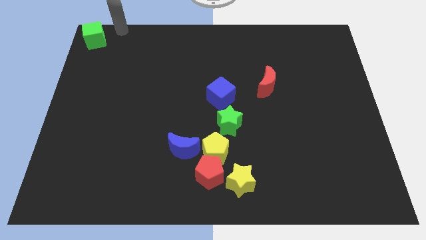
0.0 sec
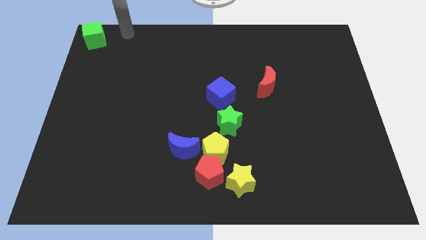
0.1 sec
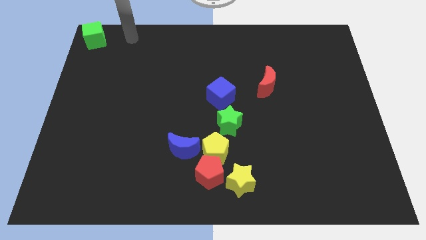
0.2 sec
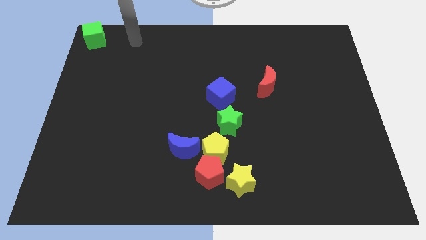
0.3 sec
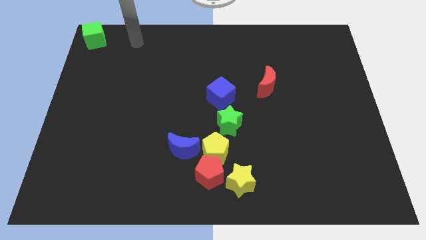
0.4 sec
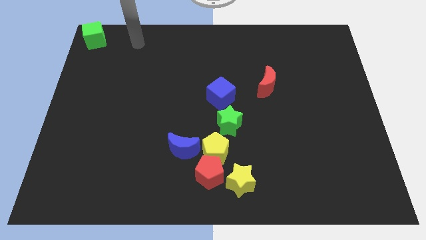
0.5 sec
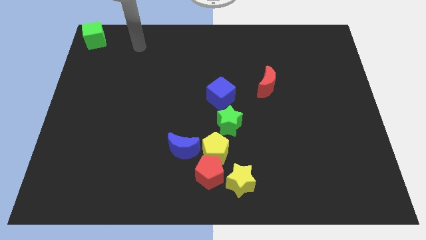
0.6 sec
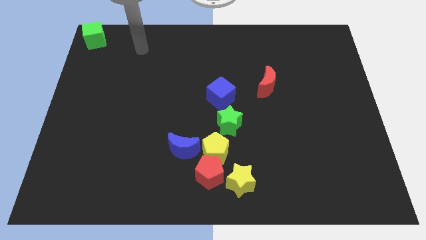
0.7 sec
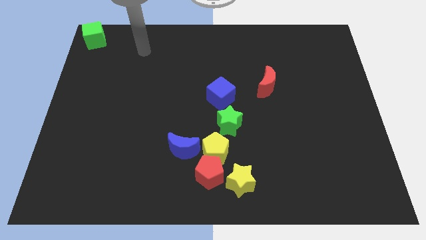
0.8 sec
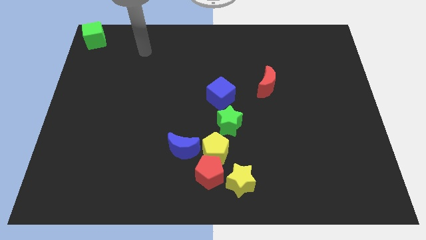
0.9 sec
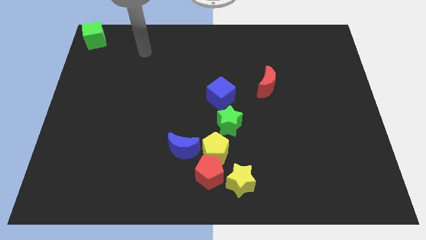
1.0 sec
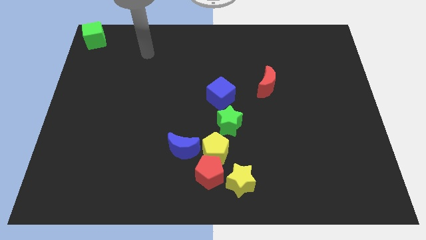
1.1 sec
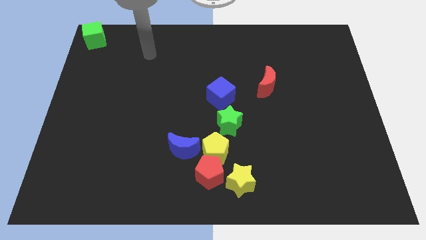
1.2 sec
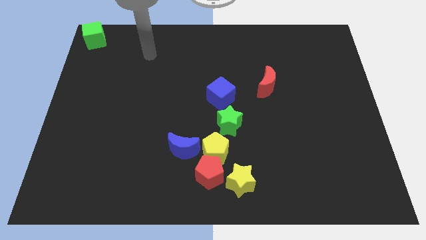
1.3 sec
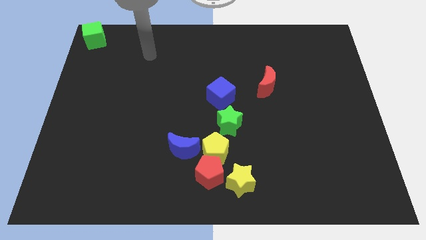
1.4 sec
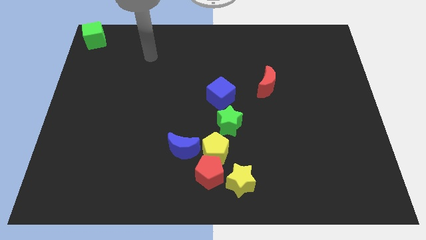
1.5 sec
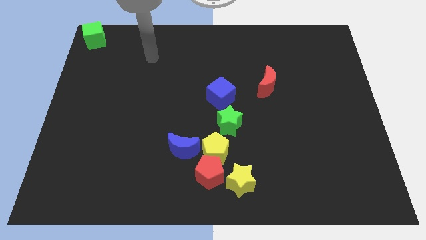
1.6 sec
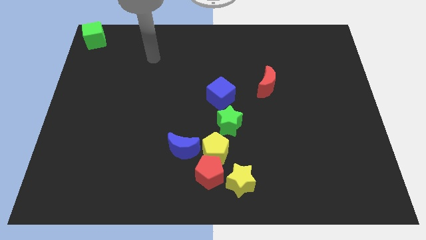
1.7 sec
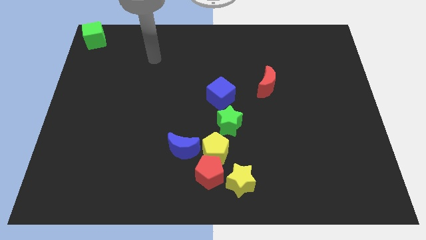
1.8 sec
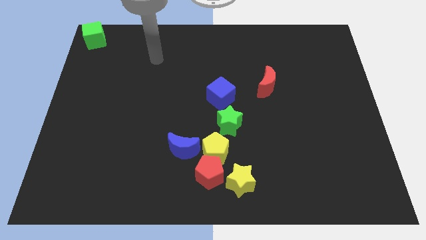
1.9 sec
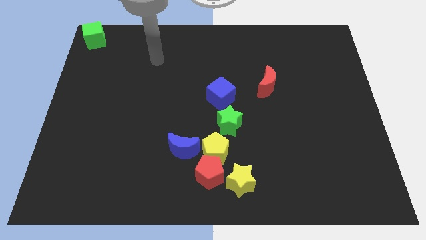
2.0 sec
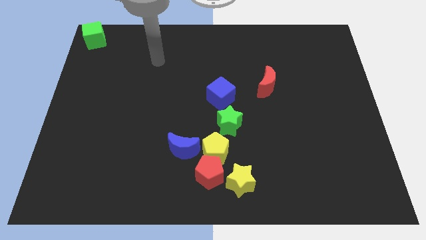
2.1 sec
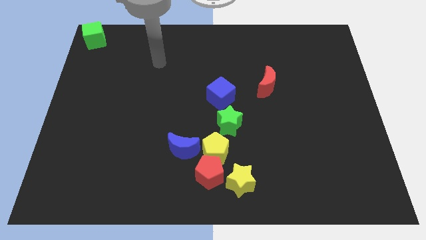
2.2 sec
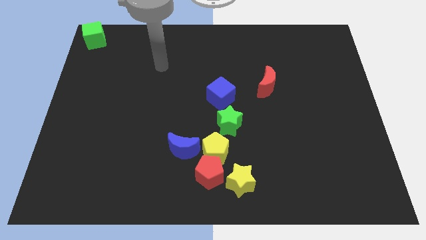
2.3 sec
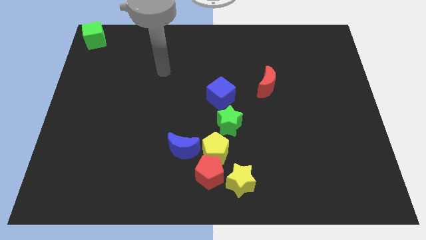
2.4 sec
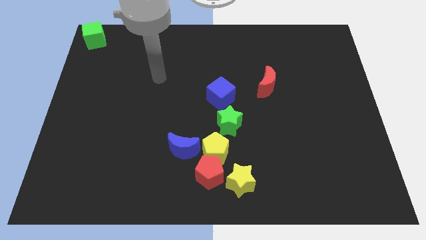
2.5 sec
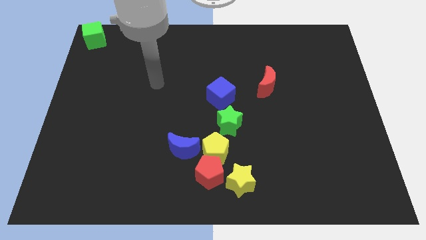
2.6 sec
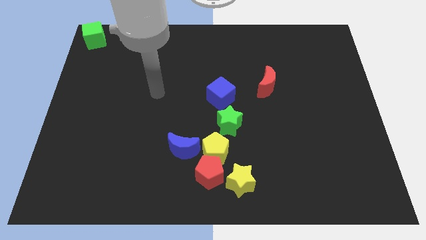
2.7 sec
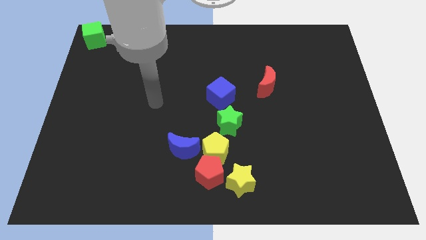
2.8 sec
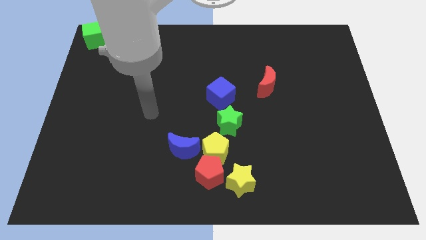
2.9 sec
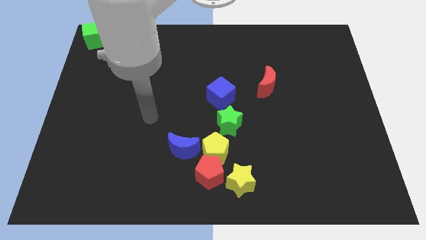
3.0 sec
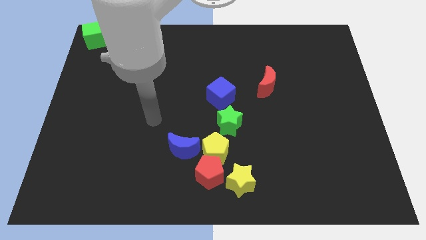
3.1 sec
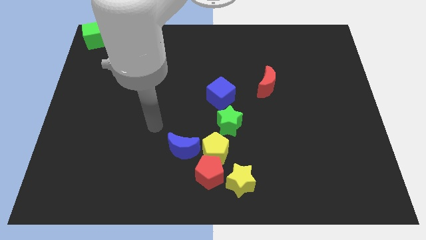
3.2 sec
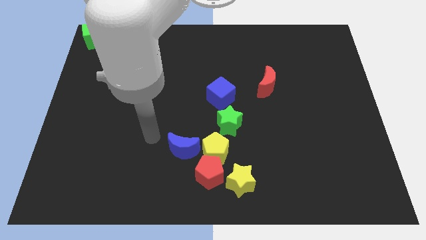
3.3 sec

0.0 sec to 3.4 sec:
move your arm and point to the left of blue moon

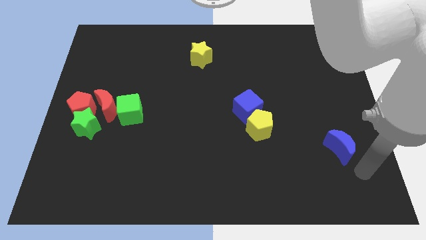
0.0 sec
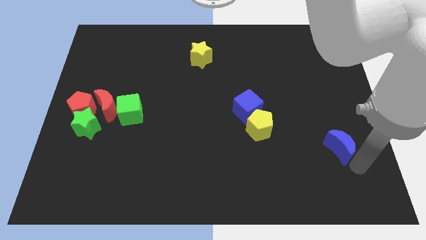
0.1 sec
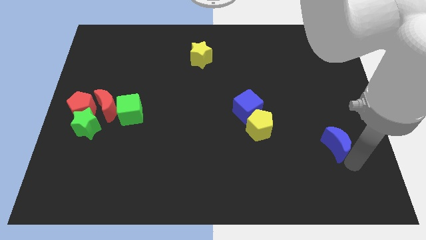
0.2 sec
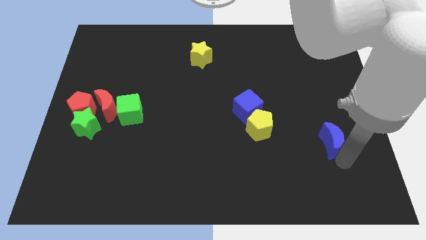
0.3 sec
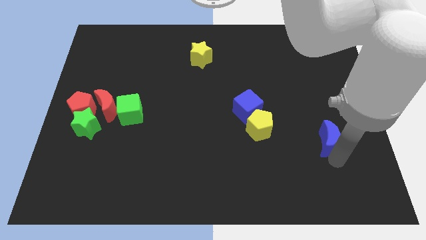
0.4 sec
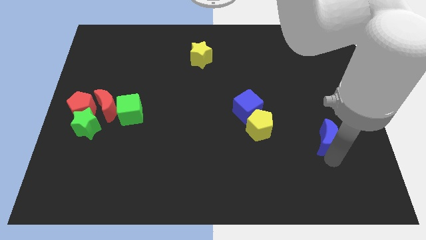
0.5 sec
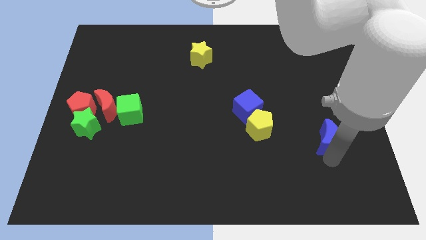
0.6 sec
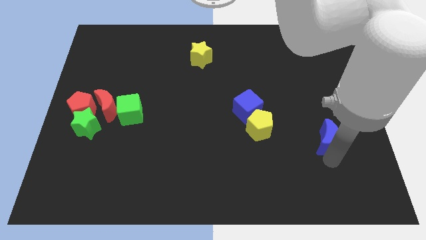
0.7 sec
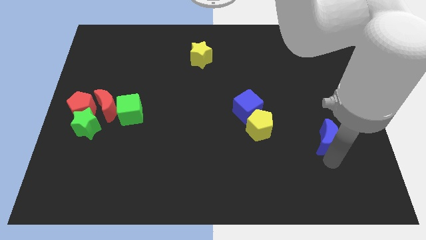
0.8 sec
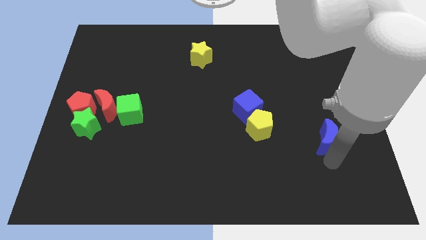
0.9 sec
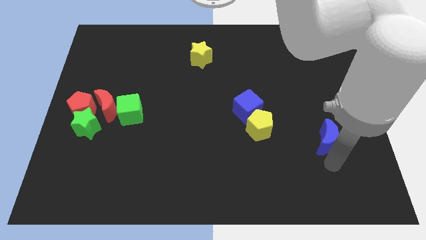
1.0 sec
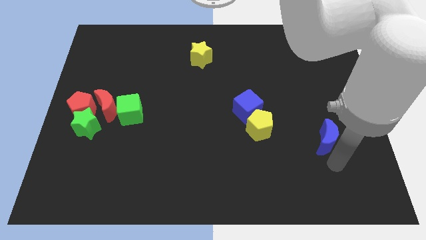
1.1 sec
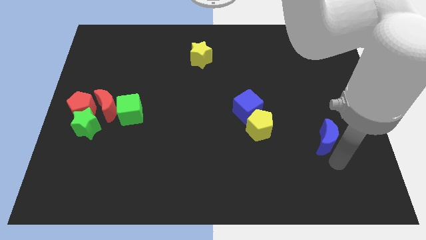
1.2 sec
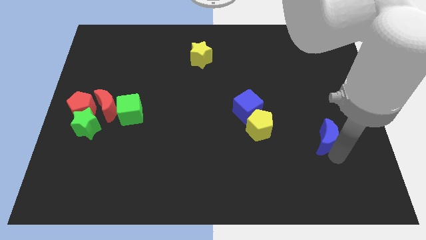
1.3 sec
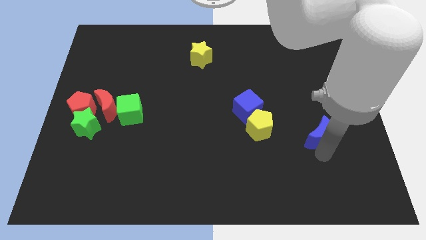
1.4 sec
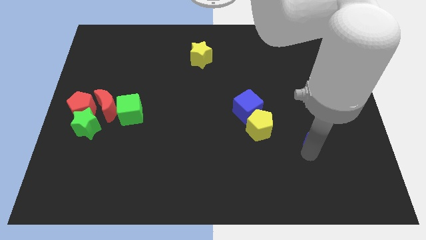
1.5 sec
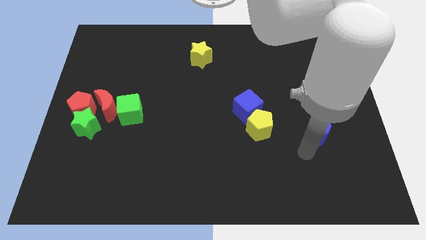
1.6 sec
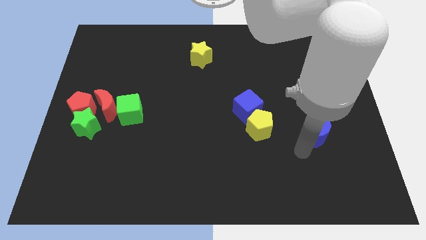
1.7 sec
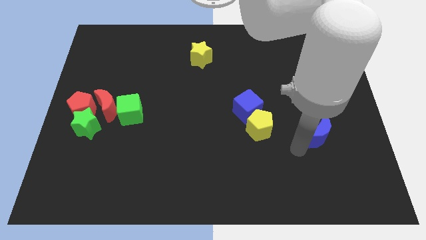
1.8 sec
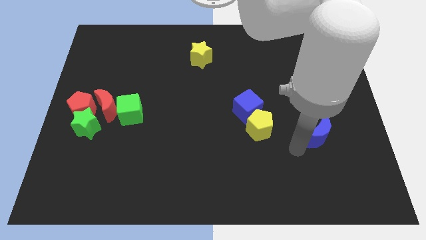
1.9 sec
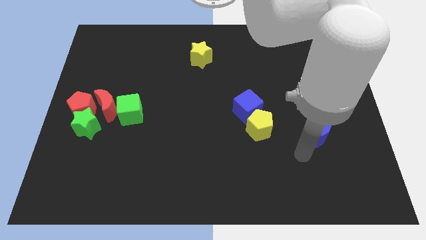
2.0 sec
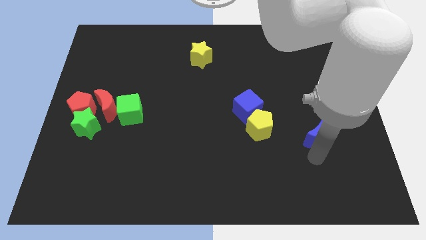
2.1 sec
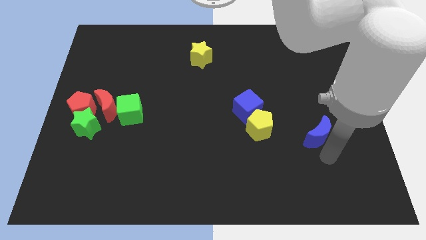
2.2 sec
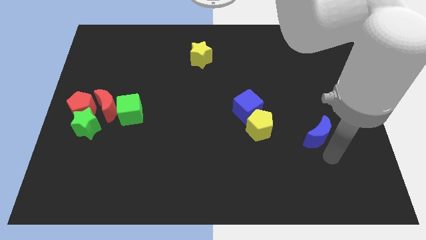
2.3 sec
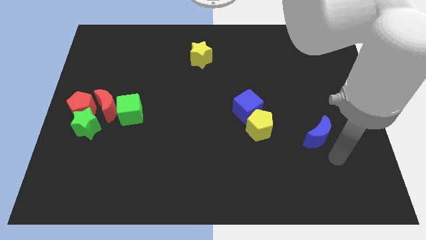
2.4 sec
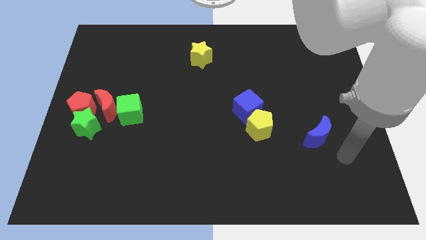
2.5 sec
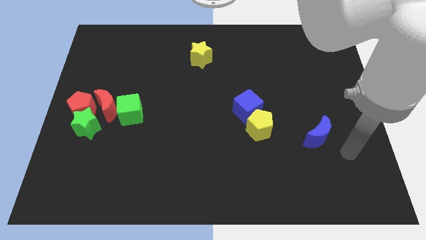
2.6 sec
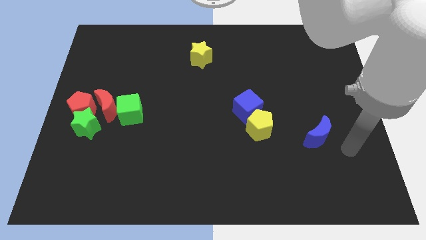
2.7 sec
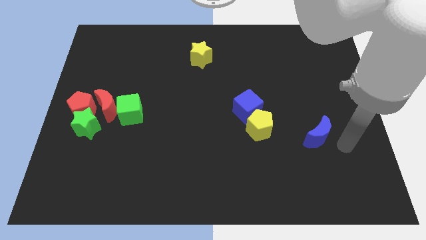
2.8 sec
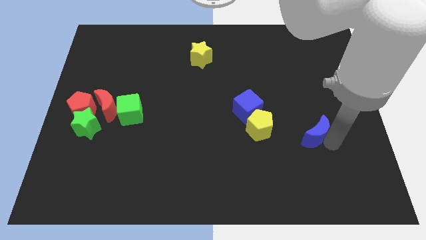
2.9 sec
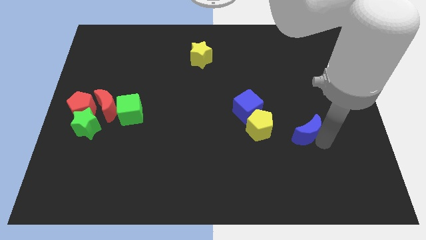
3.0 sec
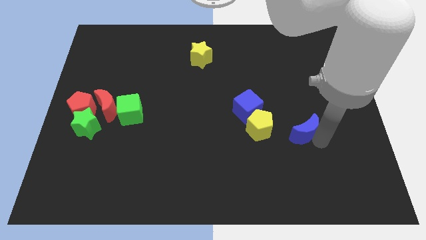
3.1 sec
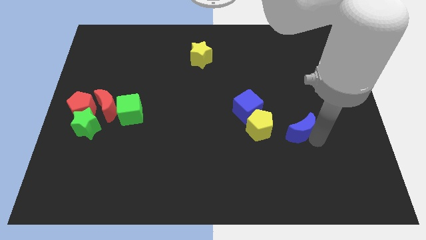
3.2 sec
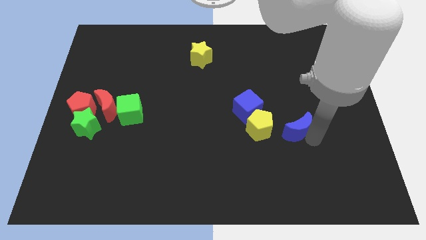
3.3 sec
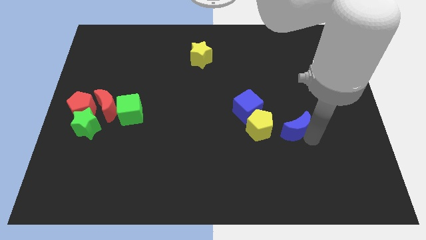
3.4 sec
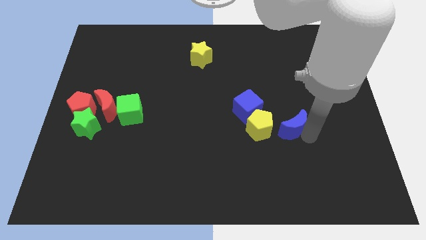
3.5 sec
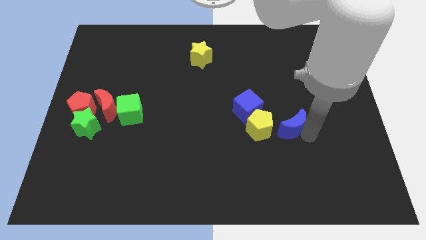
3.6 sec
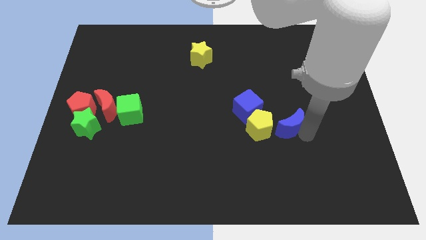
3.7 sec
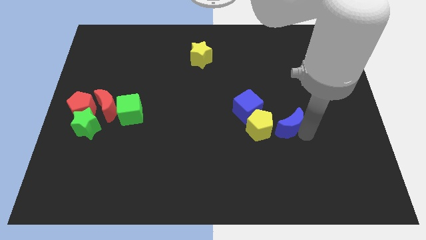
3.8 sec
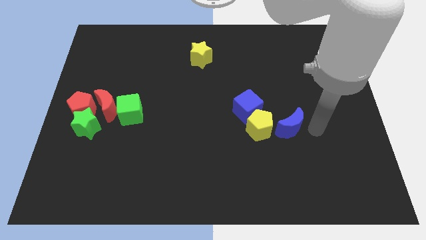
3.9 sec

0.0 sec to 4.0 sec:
place blue crescent beside yellow pentagon

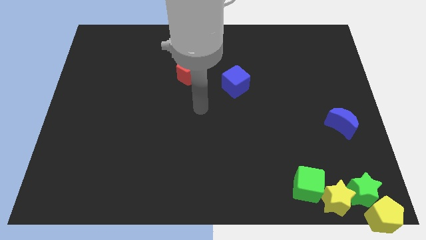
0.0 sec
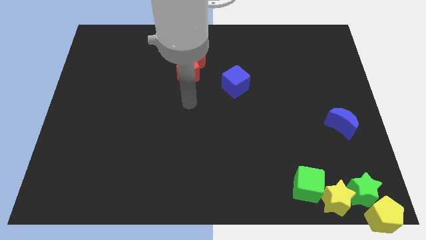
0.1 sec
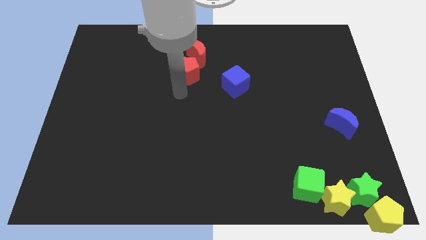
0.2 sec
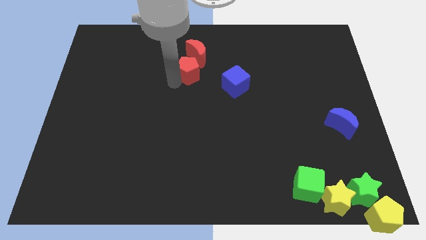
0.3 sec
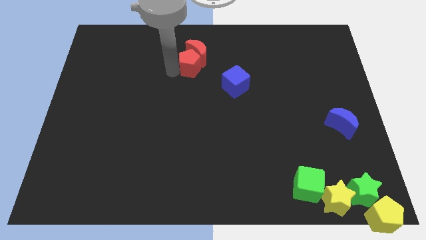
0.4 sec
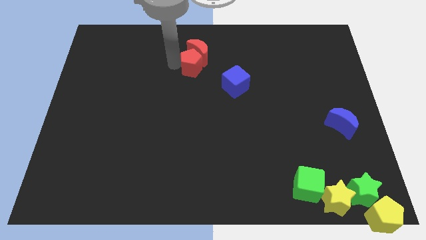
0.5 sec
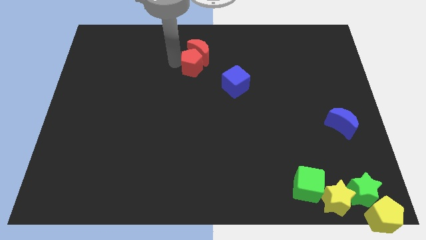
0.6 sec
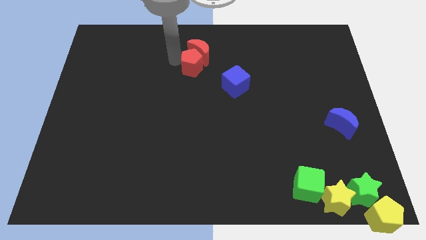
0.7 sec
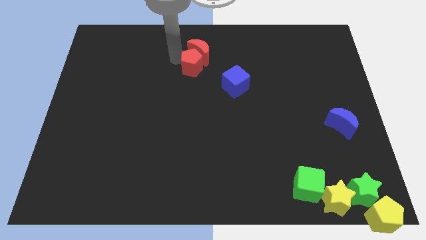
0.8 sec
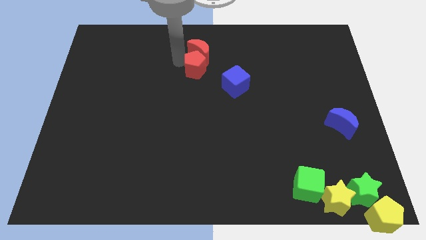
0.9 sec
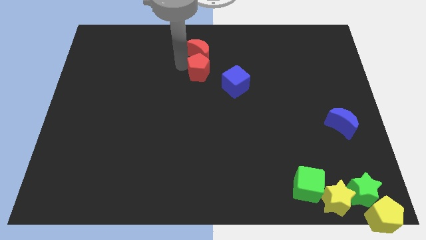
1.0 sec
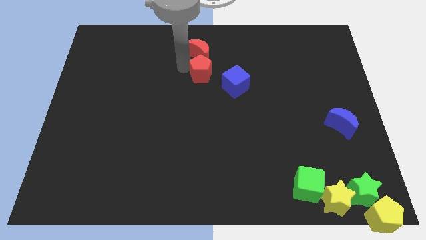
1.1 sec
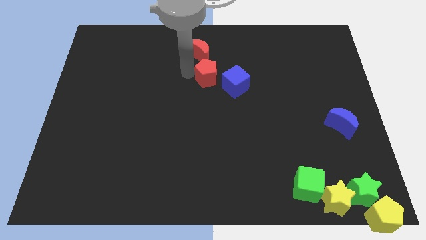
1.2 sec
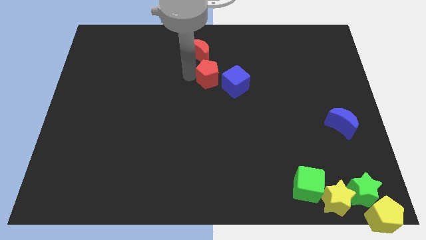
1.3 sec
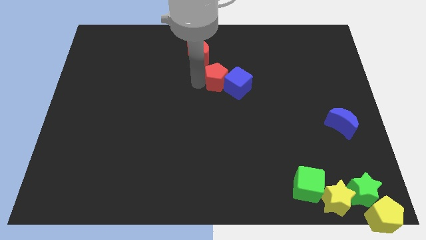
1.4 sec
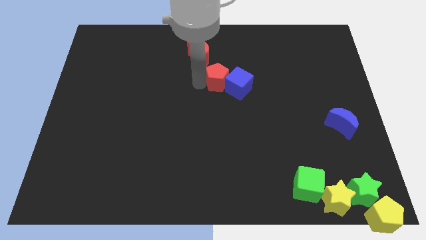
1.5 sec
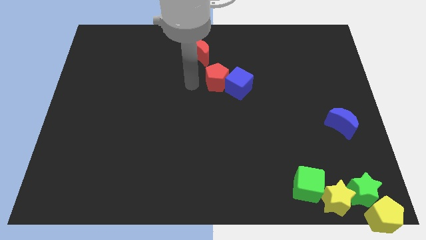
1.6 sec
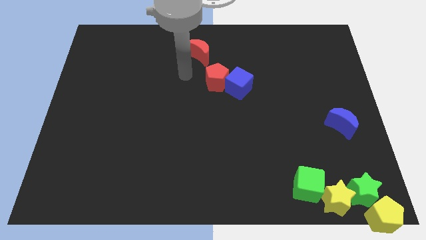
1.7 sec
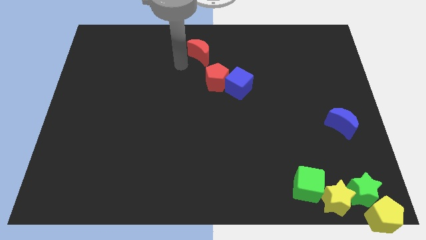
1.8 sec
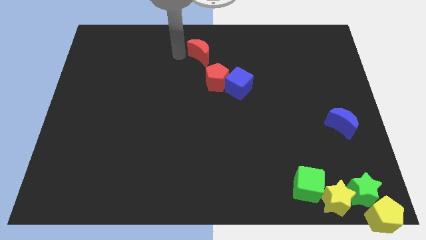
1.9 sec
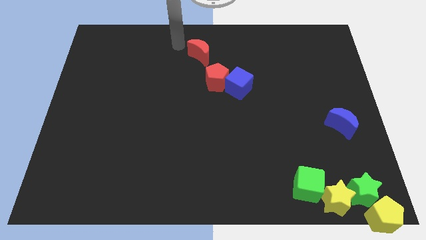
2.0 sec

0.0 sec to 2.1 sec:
push red pentagon into blue cube
